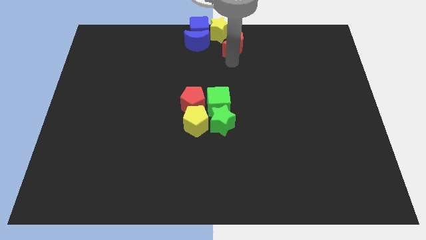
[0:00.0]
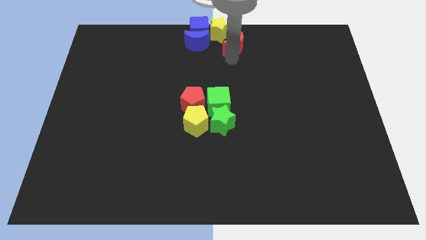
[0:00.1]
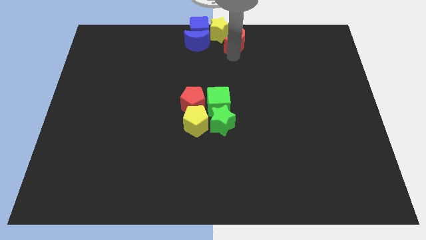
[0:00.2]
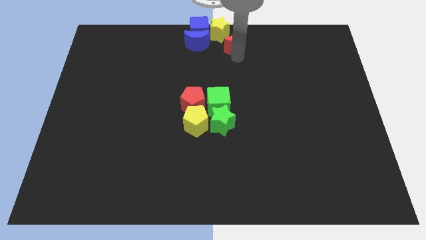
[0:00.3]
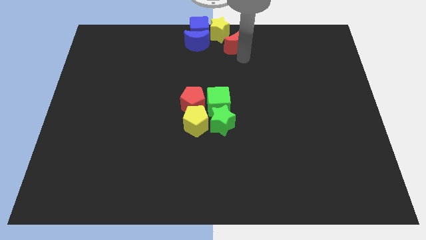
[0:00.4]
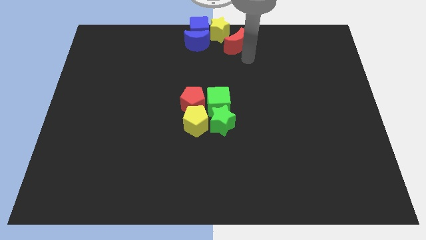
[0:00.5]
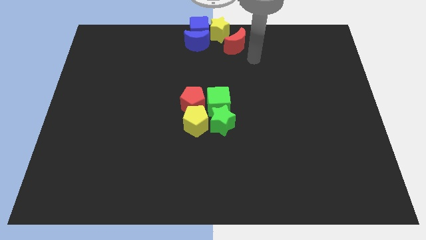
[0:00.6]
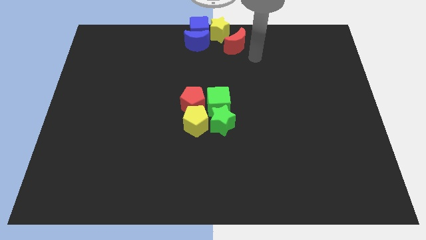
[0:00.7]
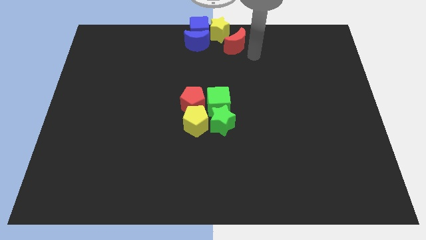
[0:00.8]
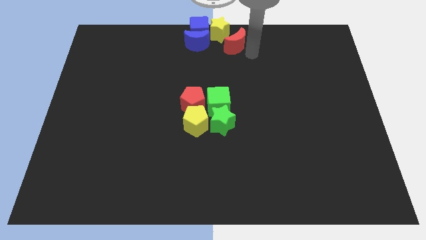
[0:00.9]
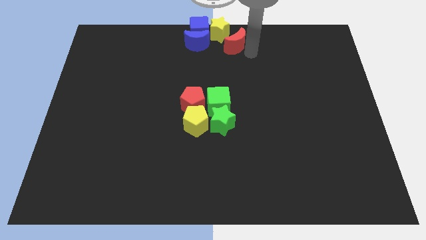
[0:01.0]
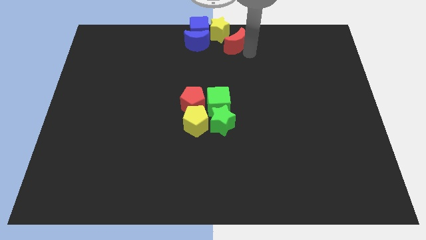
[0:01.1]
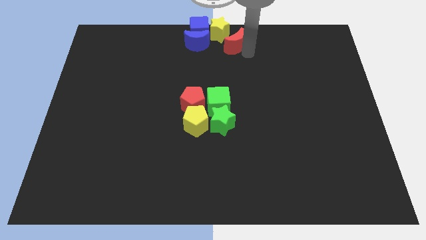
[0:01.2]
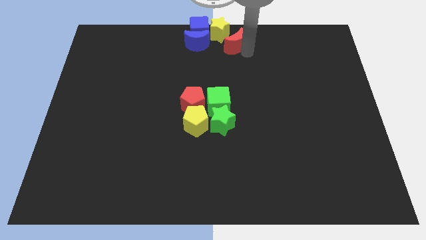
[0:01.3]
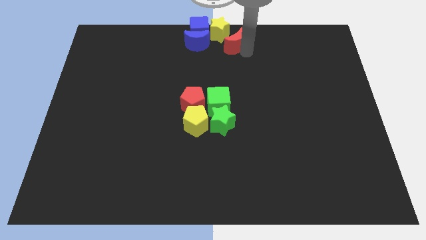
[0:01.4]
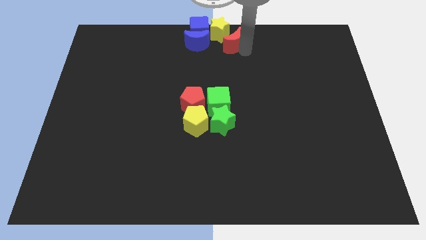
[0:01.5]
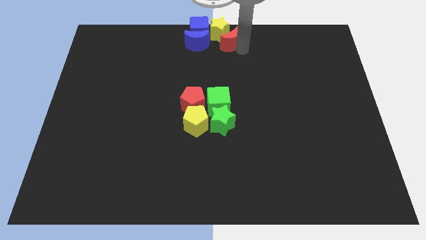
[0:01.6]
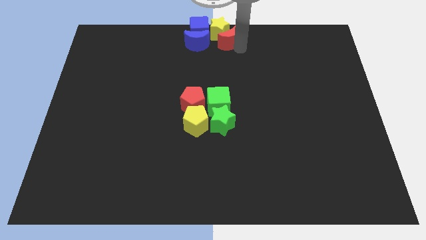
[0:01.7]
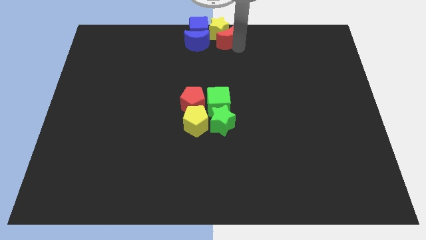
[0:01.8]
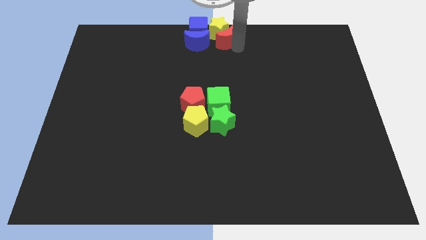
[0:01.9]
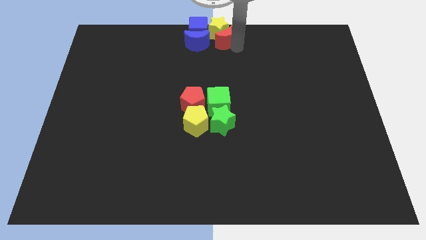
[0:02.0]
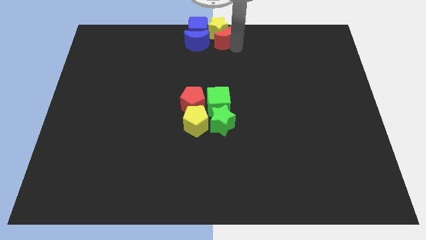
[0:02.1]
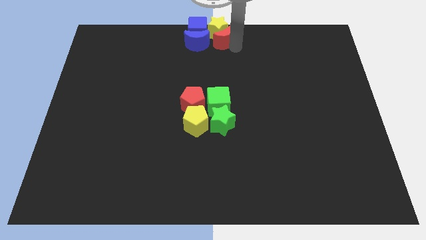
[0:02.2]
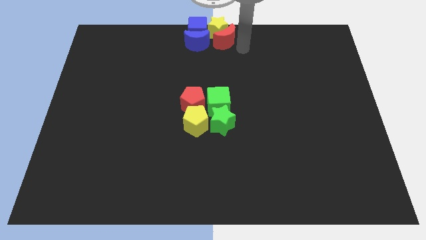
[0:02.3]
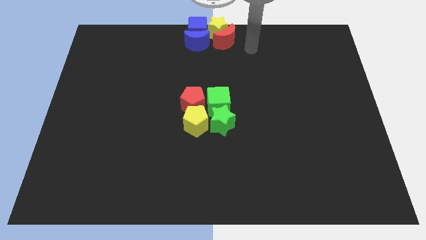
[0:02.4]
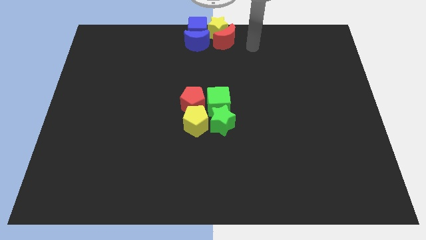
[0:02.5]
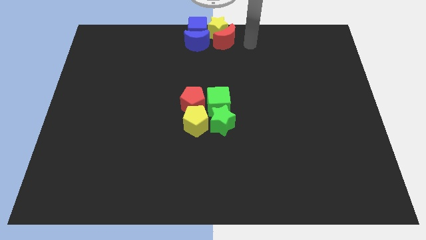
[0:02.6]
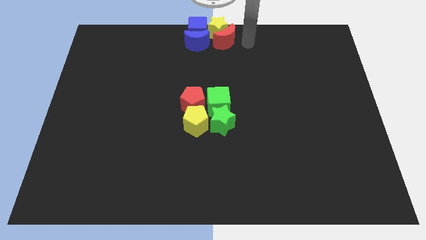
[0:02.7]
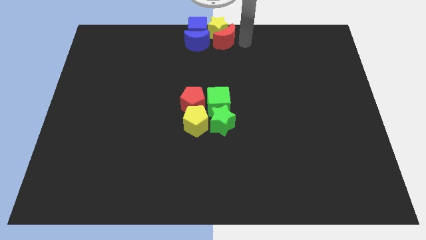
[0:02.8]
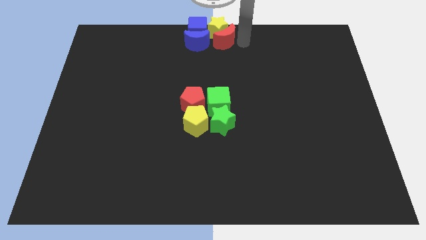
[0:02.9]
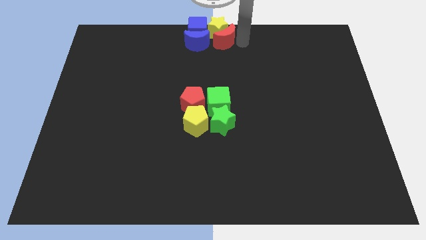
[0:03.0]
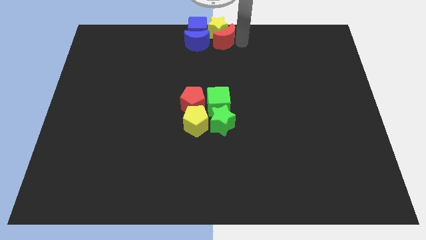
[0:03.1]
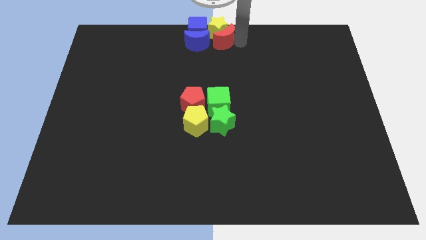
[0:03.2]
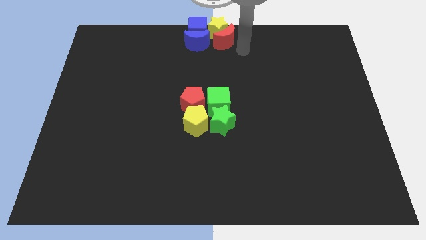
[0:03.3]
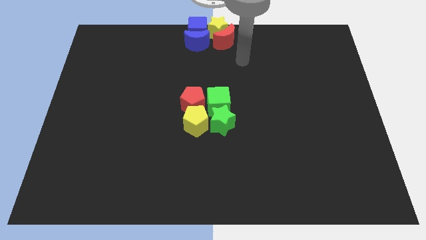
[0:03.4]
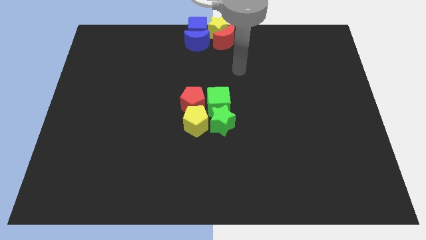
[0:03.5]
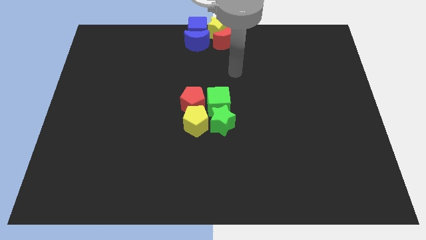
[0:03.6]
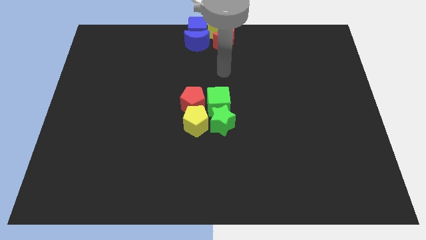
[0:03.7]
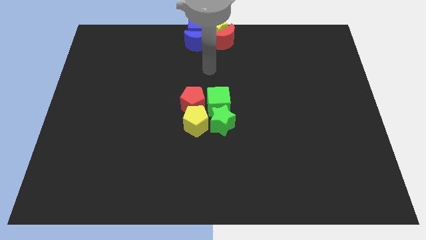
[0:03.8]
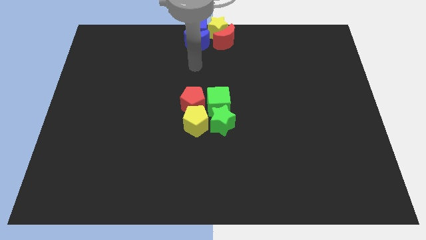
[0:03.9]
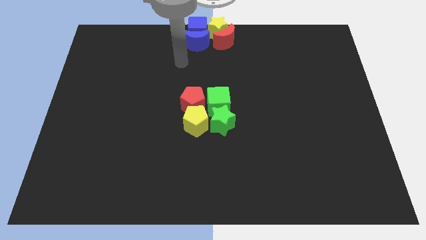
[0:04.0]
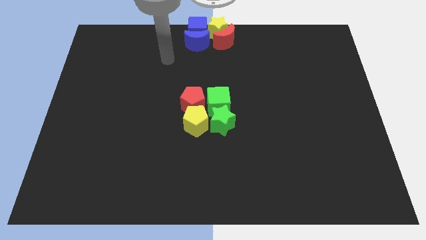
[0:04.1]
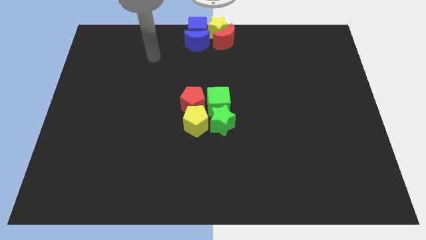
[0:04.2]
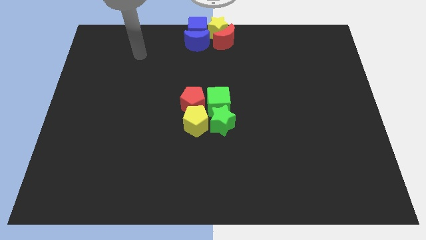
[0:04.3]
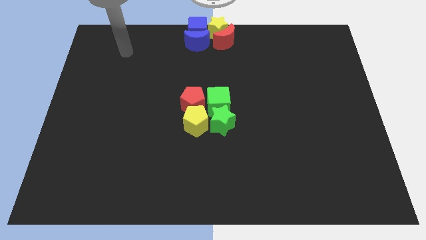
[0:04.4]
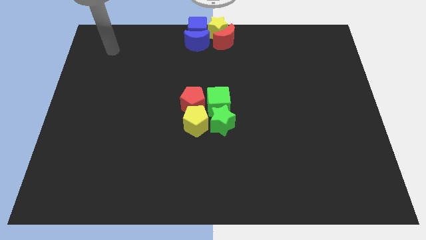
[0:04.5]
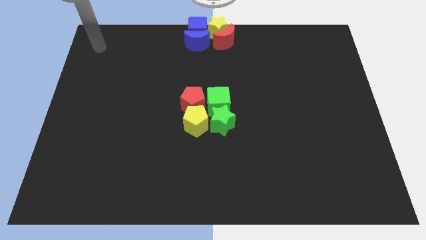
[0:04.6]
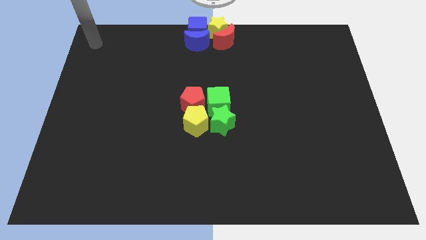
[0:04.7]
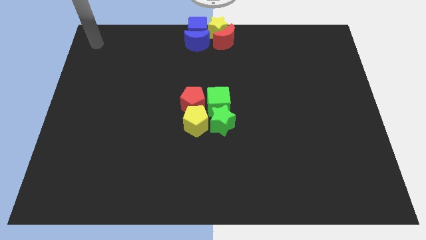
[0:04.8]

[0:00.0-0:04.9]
adjust the red crescent at the top center of the board

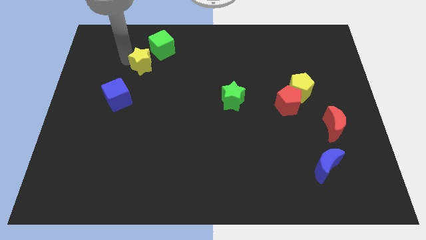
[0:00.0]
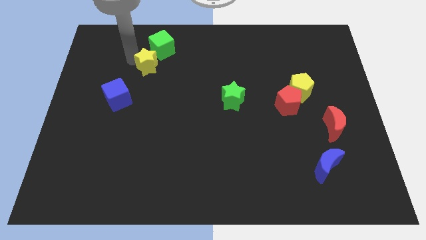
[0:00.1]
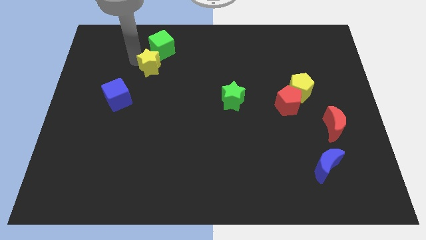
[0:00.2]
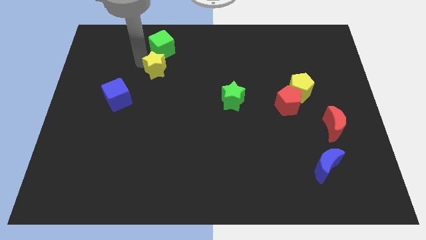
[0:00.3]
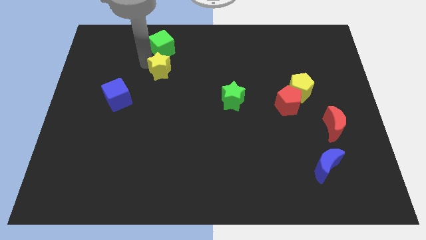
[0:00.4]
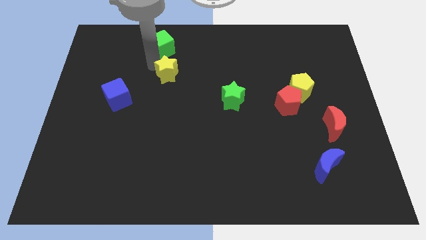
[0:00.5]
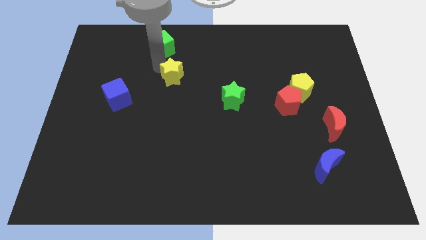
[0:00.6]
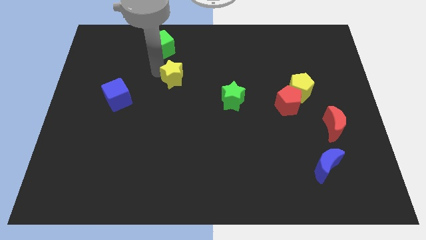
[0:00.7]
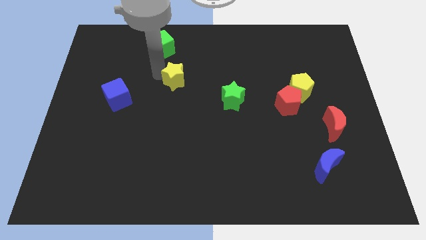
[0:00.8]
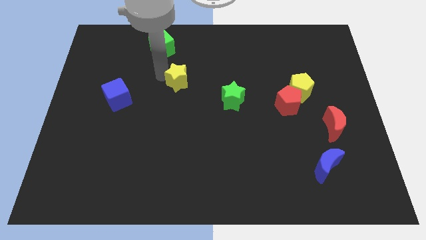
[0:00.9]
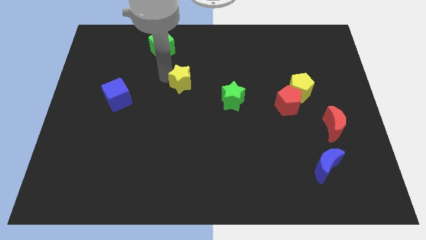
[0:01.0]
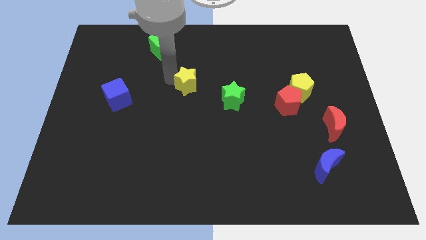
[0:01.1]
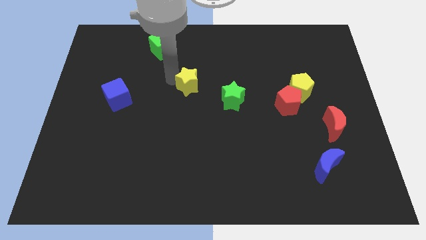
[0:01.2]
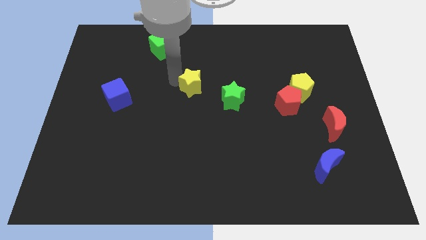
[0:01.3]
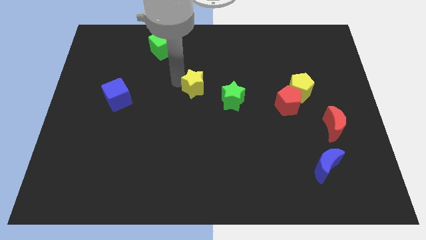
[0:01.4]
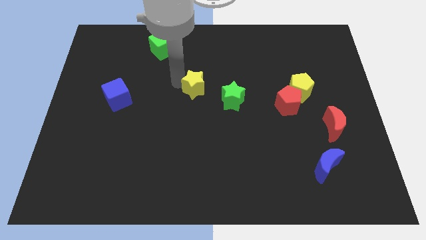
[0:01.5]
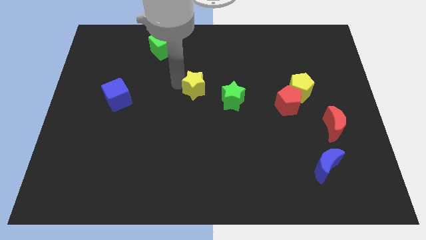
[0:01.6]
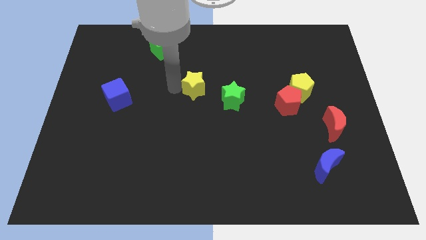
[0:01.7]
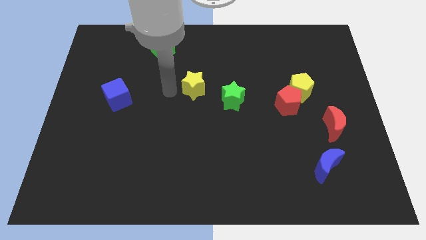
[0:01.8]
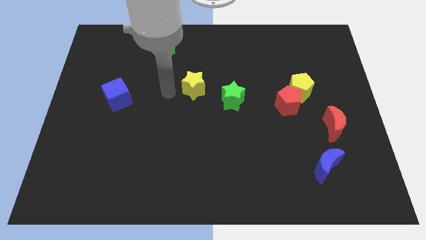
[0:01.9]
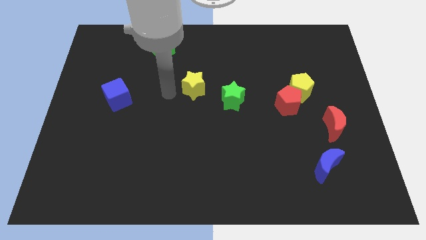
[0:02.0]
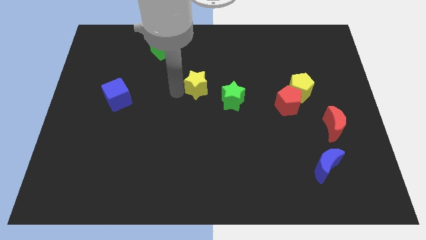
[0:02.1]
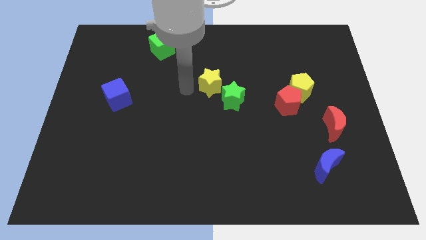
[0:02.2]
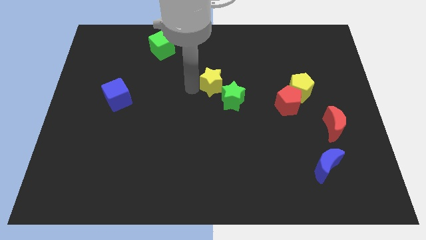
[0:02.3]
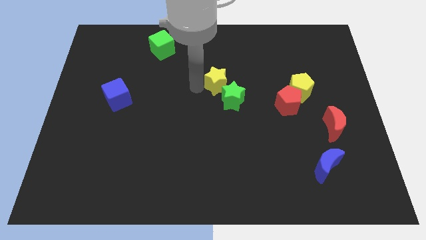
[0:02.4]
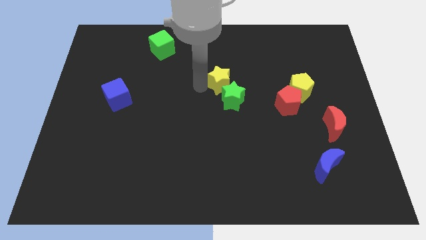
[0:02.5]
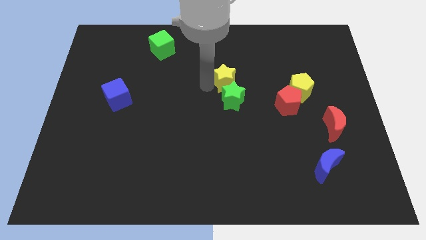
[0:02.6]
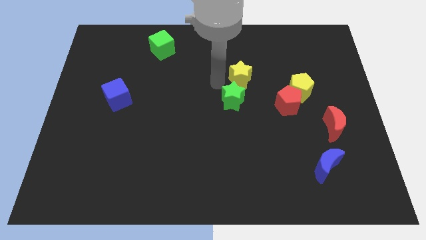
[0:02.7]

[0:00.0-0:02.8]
place the yellow star above the green star

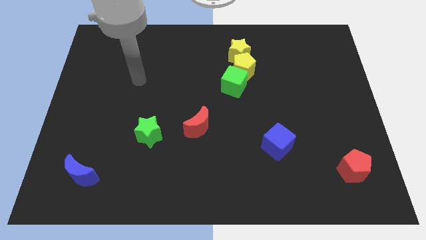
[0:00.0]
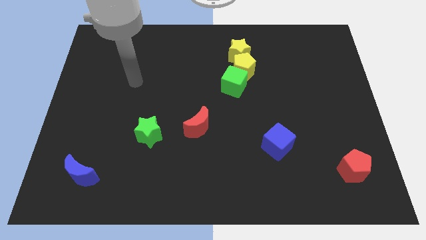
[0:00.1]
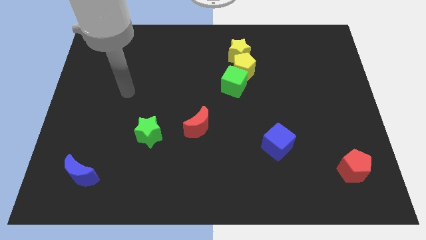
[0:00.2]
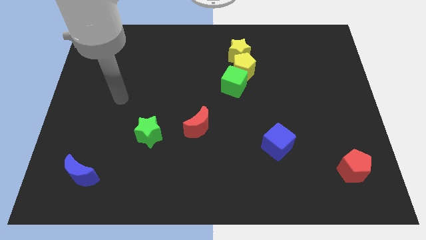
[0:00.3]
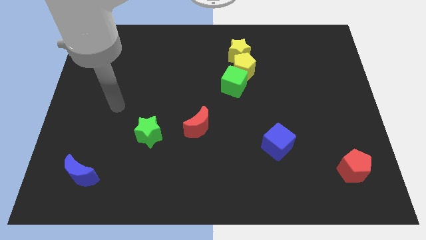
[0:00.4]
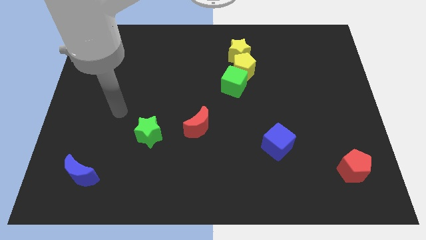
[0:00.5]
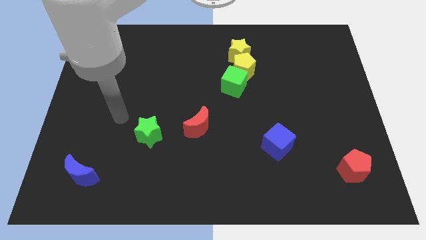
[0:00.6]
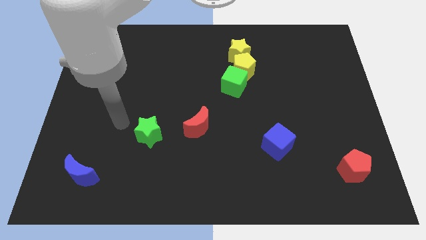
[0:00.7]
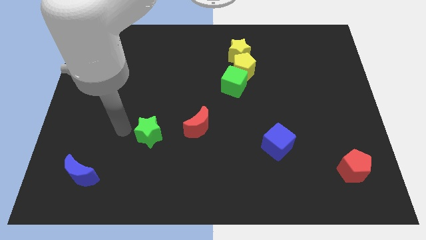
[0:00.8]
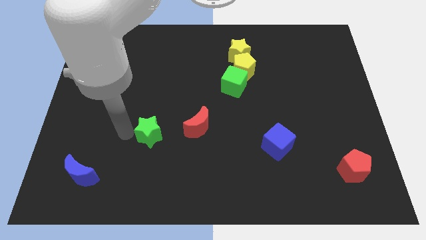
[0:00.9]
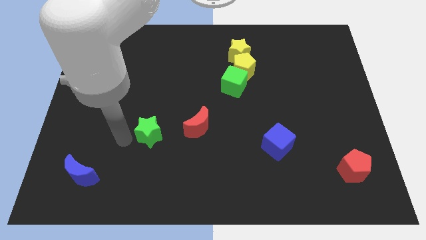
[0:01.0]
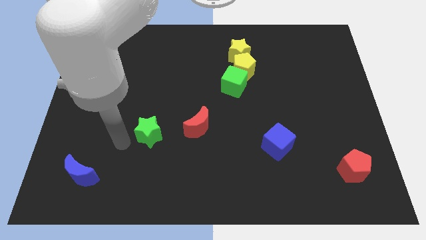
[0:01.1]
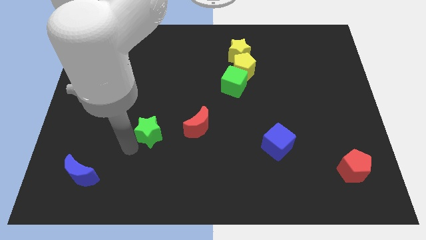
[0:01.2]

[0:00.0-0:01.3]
move your arm towards the green star
